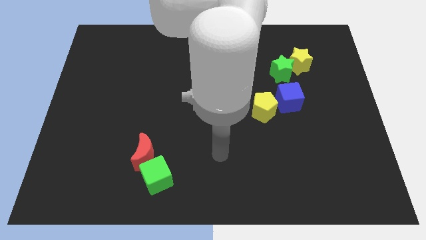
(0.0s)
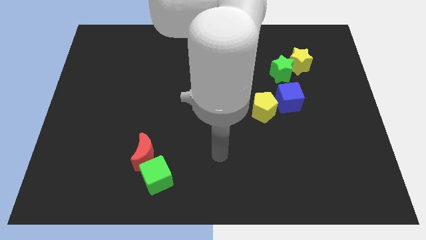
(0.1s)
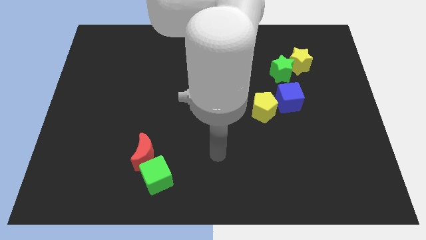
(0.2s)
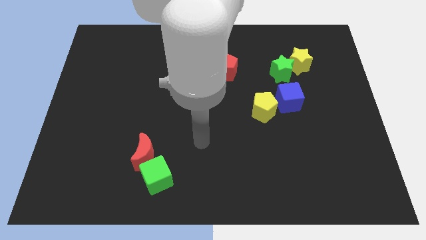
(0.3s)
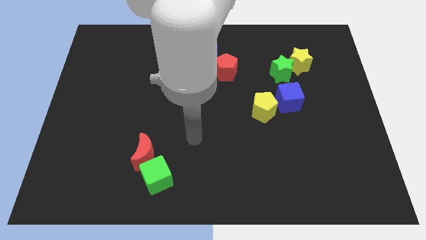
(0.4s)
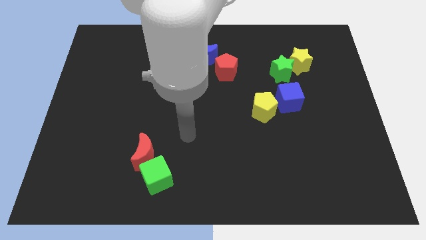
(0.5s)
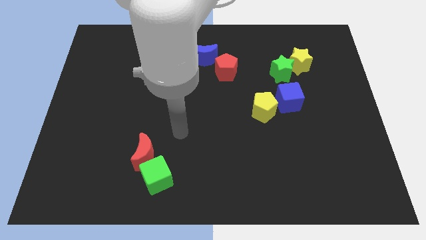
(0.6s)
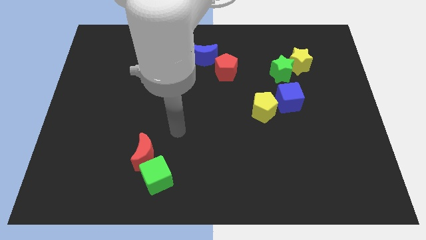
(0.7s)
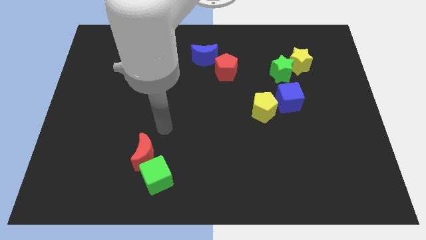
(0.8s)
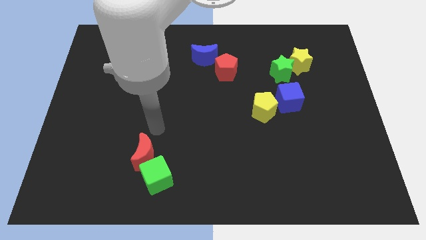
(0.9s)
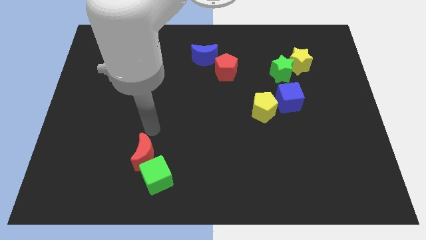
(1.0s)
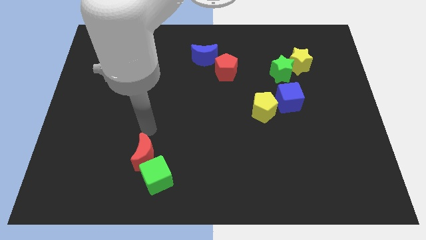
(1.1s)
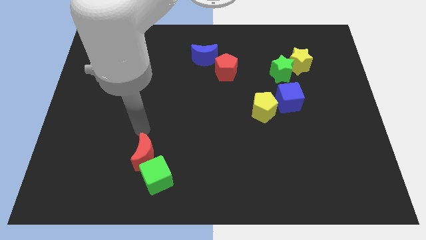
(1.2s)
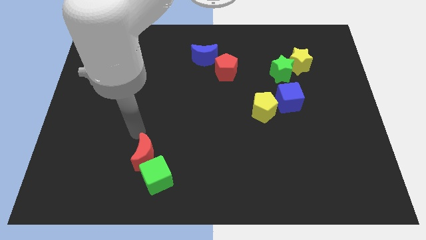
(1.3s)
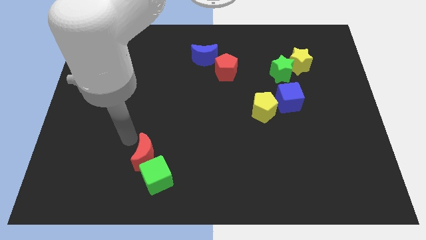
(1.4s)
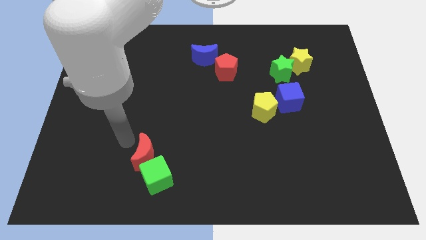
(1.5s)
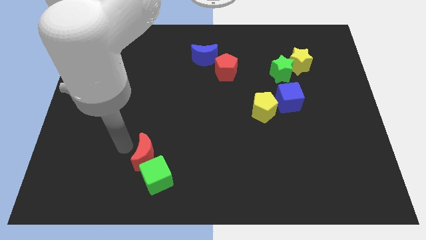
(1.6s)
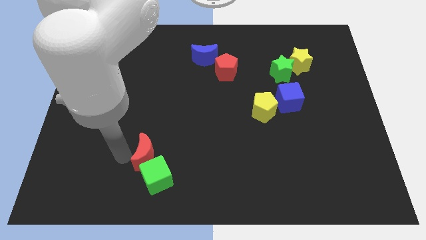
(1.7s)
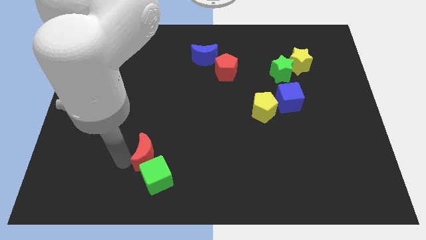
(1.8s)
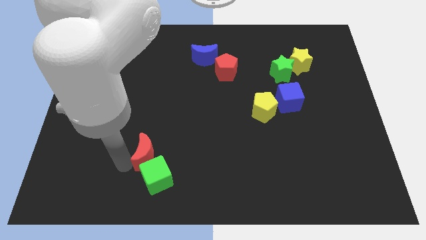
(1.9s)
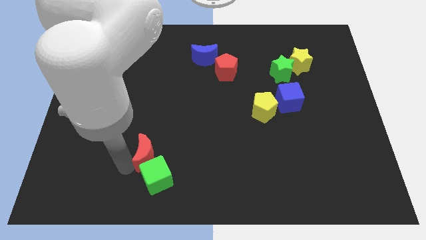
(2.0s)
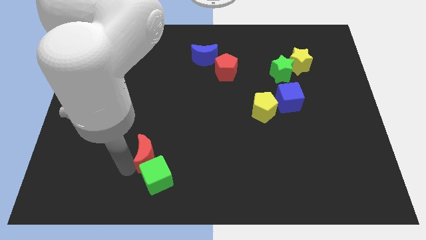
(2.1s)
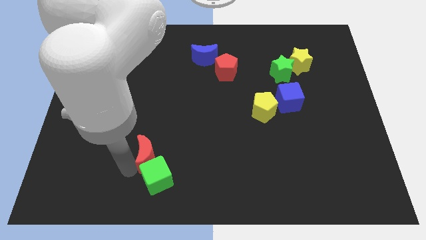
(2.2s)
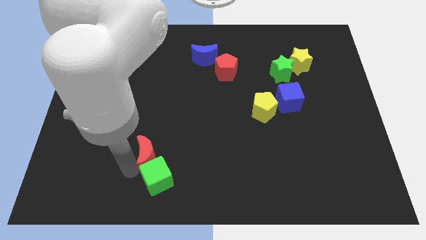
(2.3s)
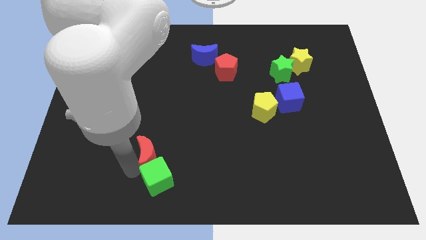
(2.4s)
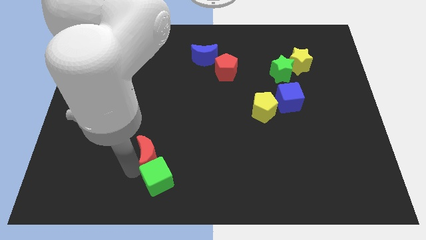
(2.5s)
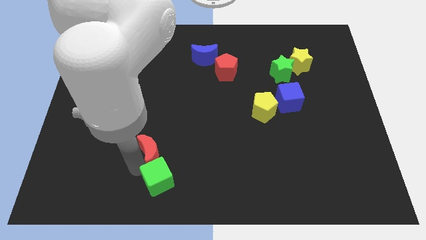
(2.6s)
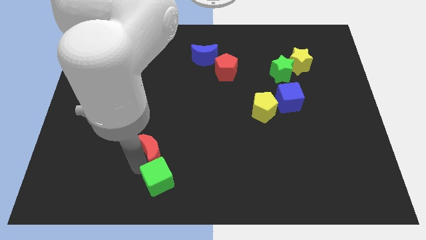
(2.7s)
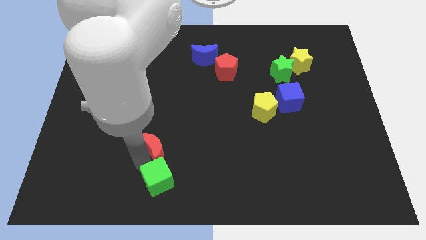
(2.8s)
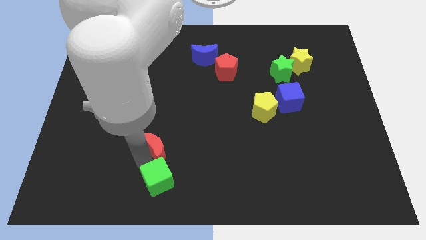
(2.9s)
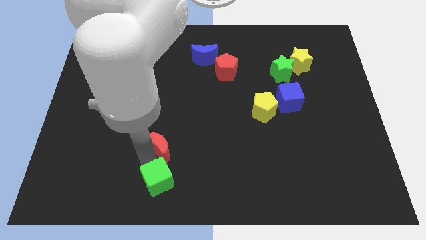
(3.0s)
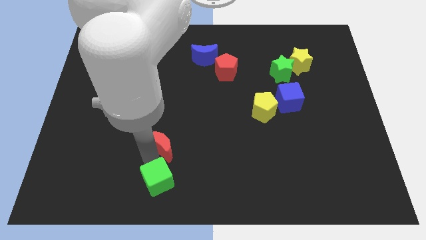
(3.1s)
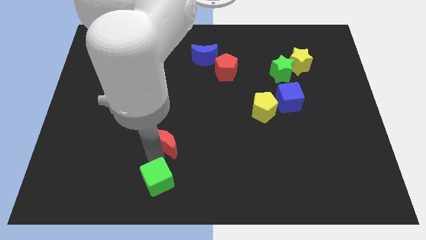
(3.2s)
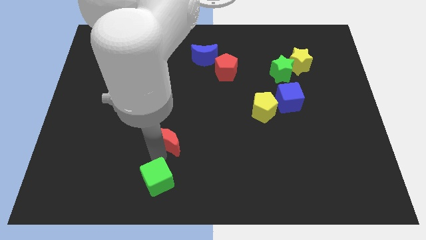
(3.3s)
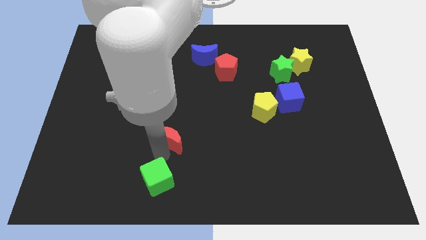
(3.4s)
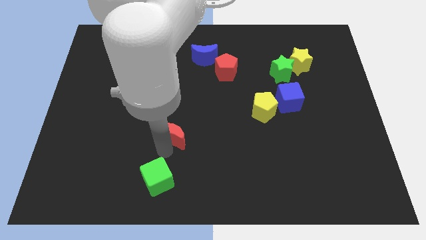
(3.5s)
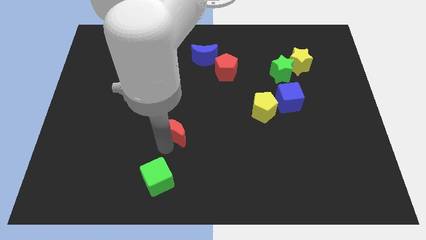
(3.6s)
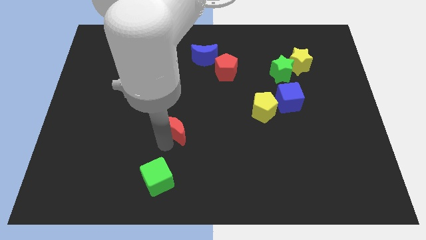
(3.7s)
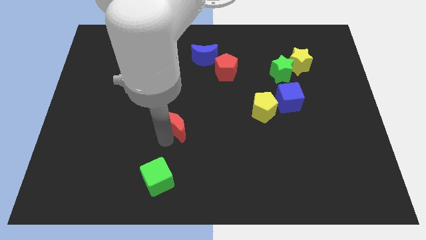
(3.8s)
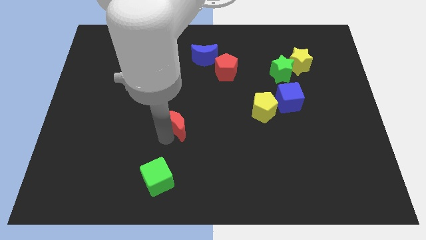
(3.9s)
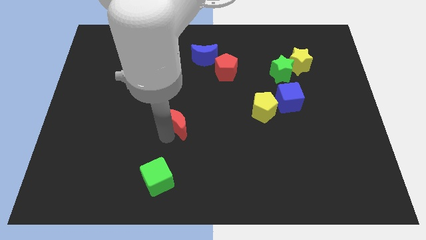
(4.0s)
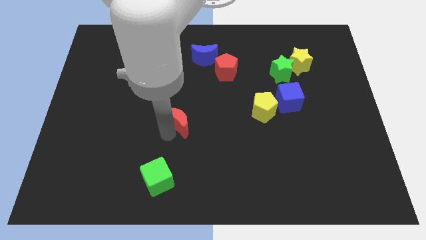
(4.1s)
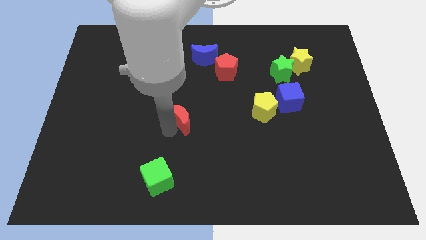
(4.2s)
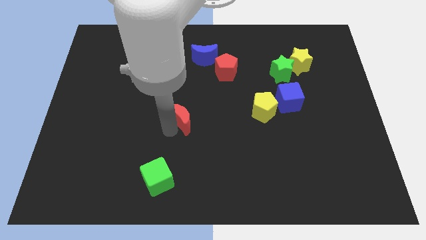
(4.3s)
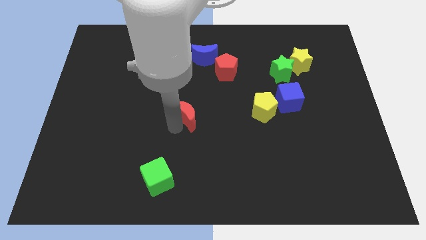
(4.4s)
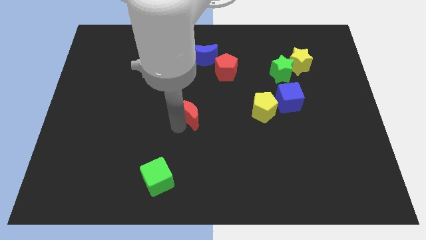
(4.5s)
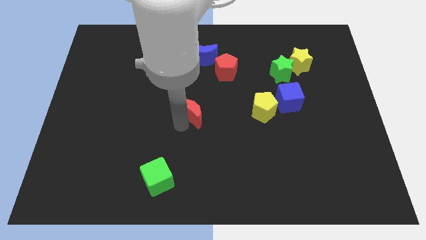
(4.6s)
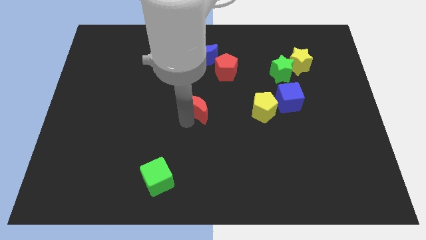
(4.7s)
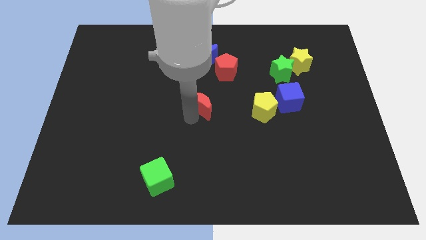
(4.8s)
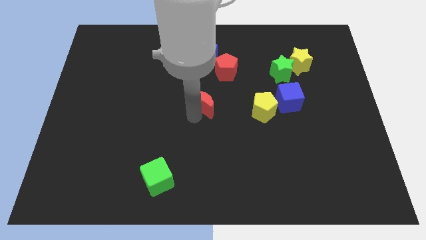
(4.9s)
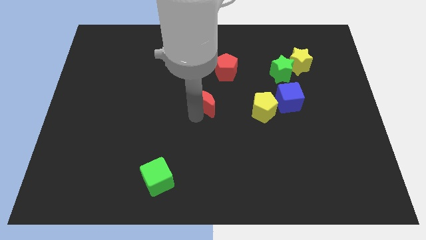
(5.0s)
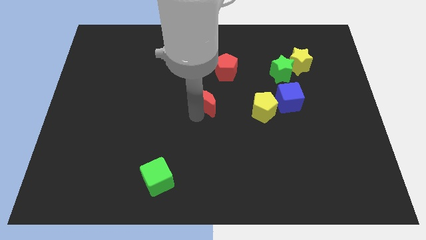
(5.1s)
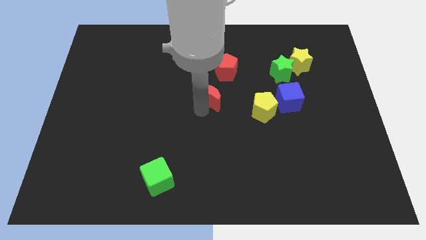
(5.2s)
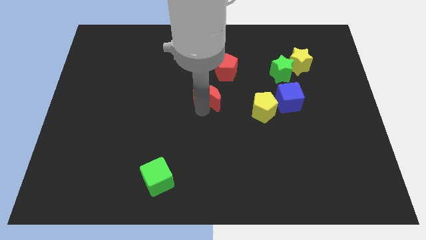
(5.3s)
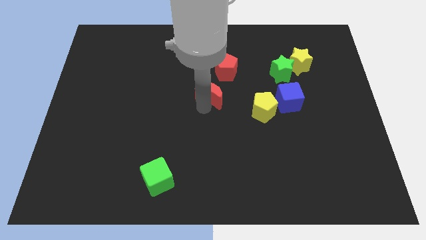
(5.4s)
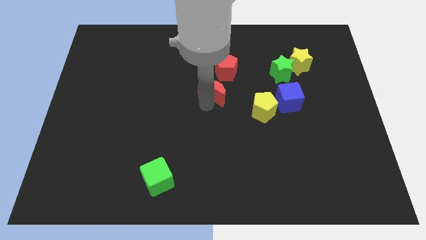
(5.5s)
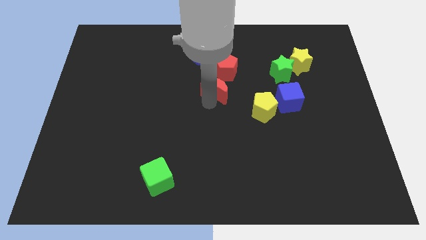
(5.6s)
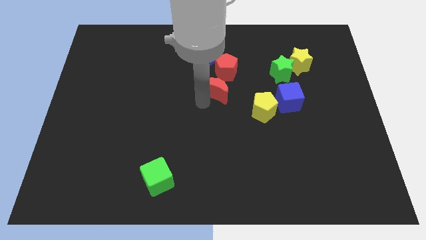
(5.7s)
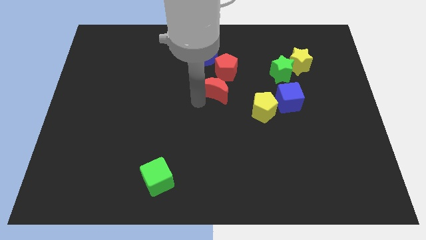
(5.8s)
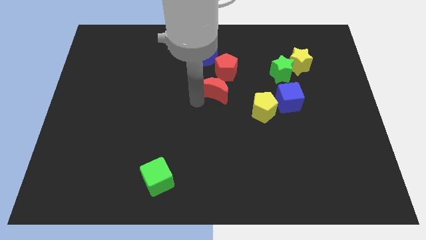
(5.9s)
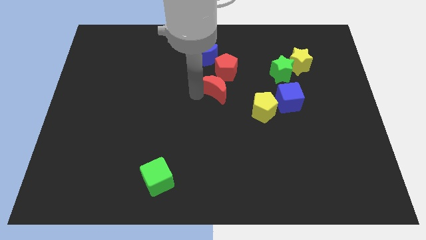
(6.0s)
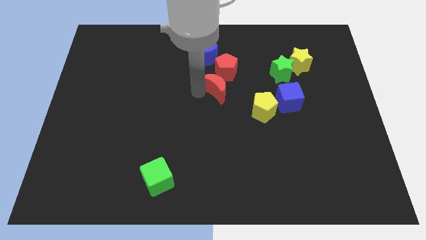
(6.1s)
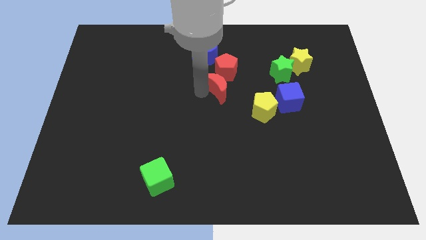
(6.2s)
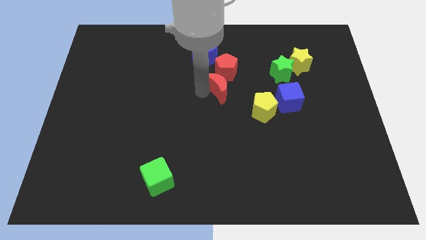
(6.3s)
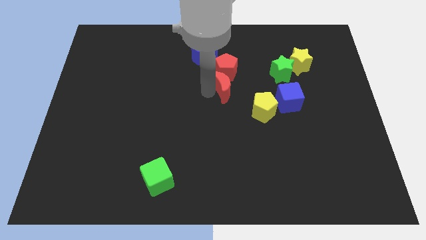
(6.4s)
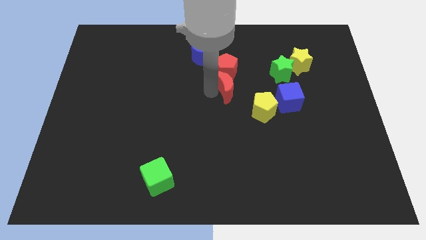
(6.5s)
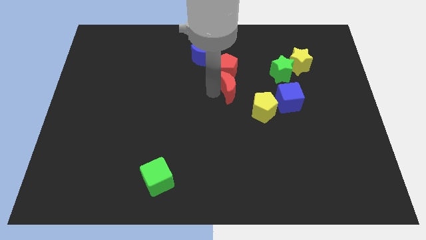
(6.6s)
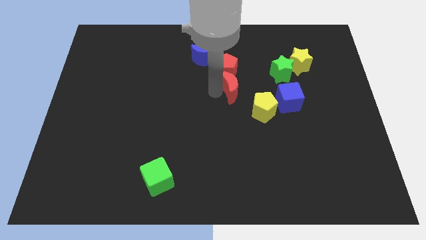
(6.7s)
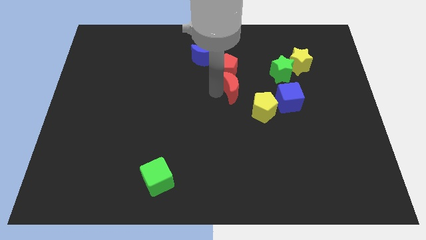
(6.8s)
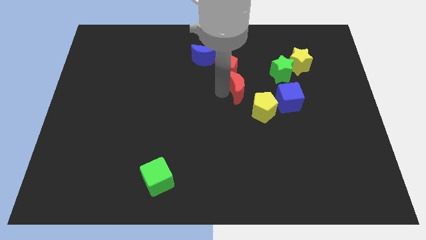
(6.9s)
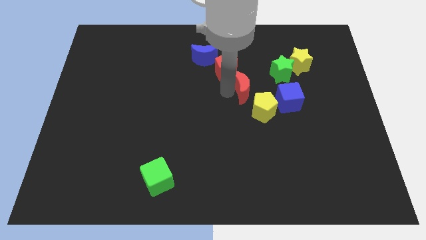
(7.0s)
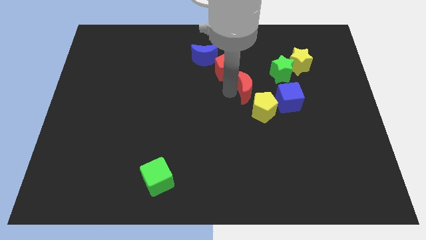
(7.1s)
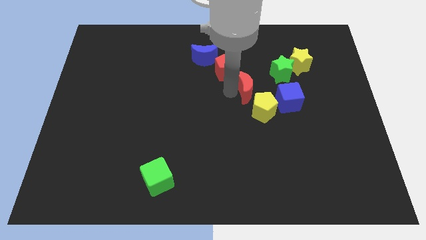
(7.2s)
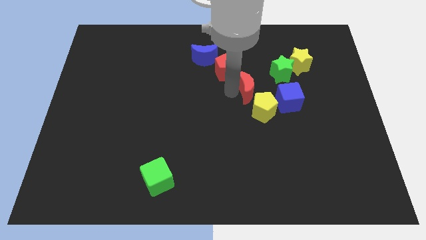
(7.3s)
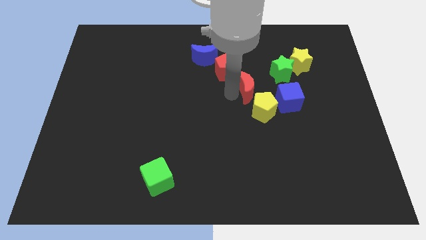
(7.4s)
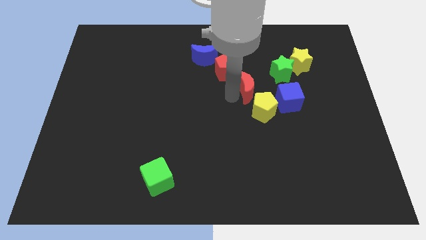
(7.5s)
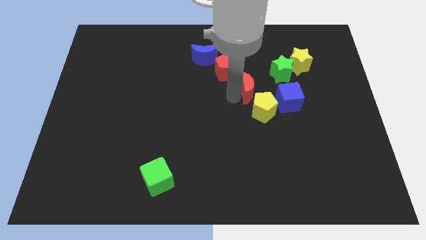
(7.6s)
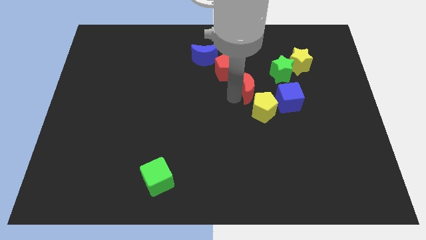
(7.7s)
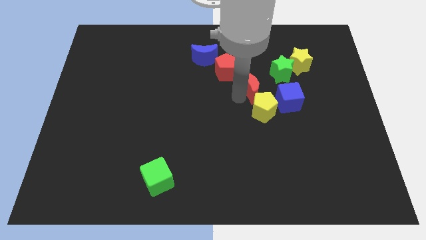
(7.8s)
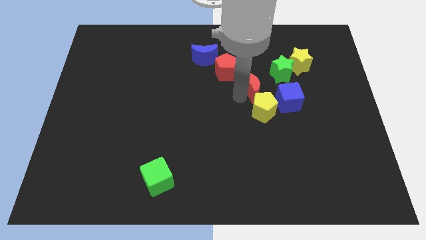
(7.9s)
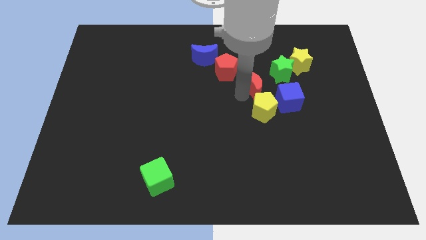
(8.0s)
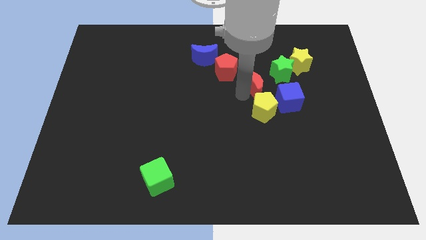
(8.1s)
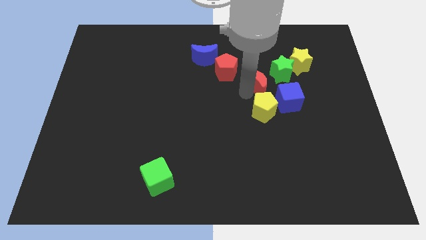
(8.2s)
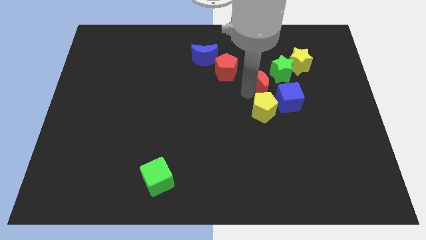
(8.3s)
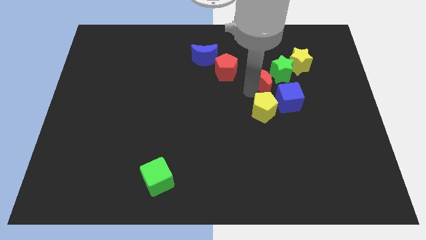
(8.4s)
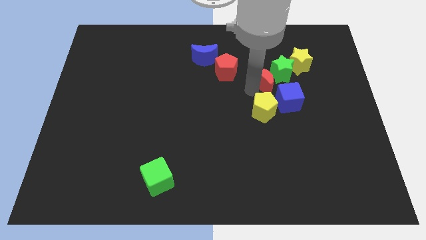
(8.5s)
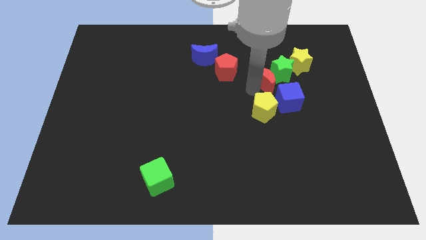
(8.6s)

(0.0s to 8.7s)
put the red moon close to the green star

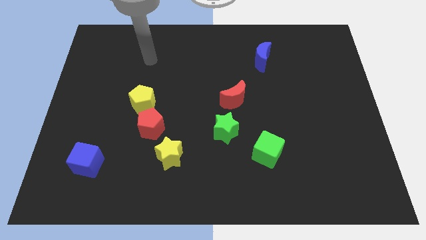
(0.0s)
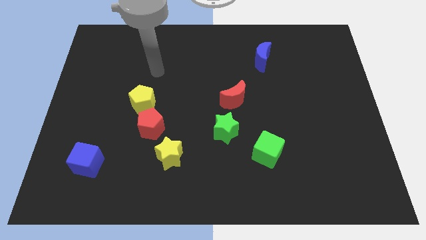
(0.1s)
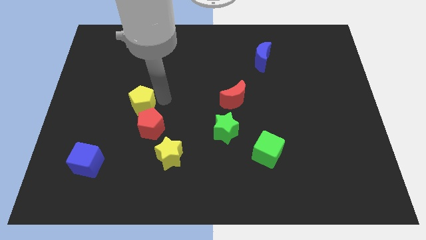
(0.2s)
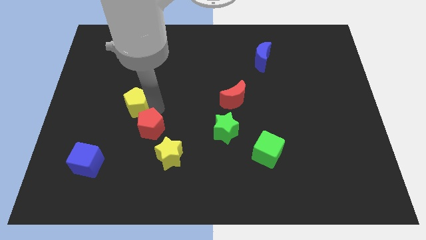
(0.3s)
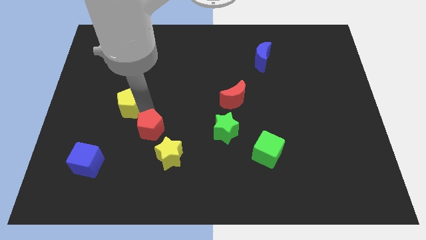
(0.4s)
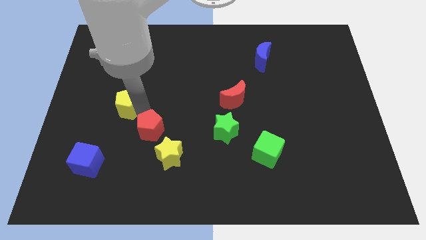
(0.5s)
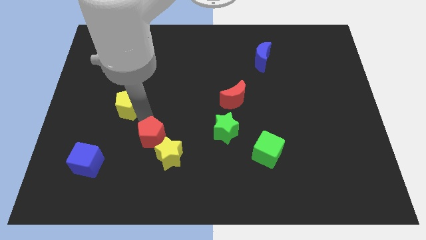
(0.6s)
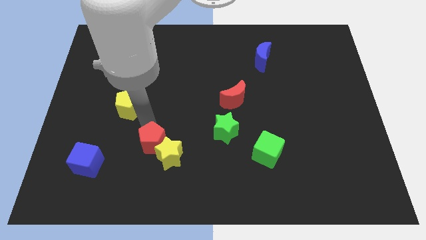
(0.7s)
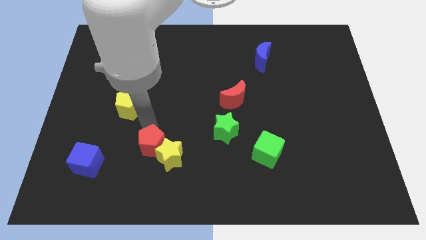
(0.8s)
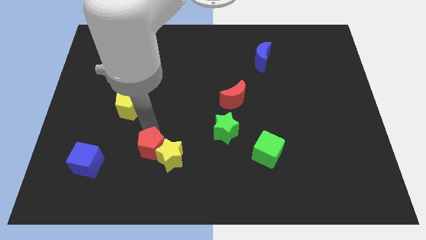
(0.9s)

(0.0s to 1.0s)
slide the red pentagon towards the yellow star
